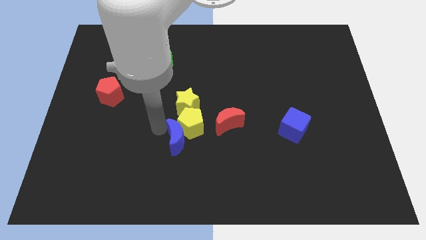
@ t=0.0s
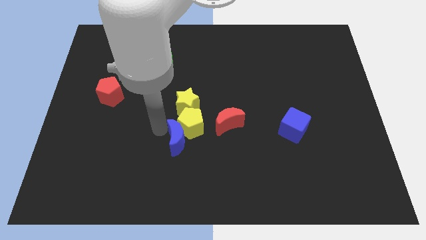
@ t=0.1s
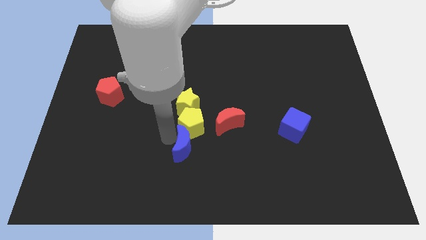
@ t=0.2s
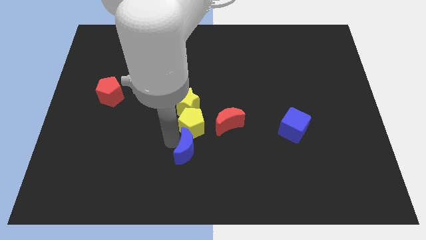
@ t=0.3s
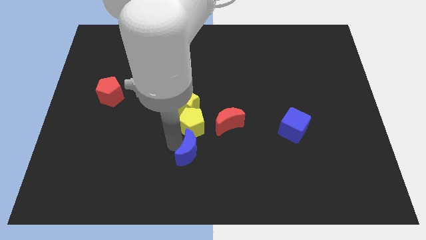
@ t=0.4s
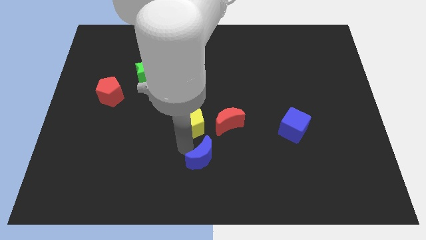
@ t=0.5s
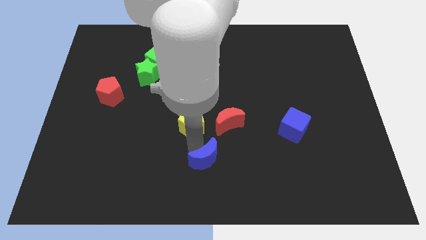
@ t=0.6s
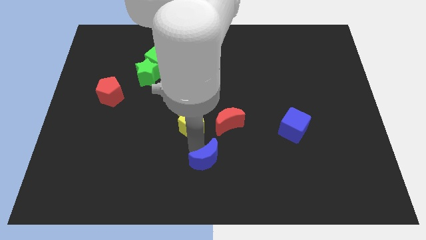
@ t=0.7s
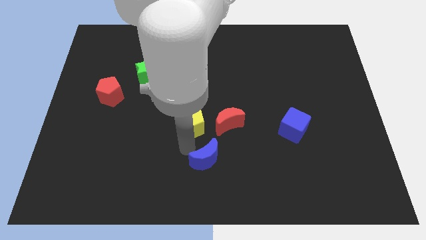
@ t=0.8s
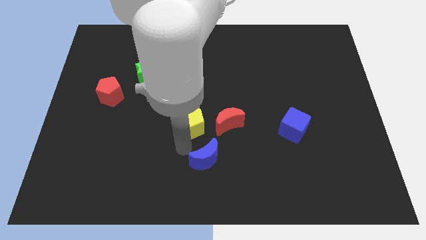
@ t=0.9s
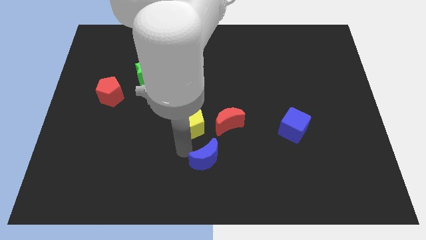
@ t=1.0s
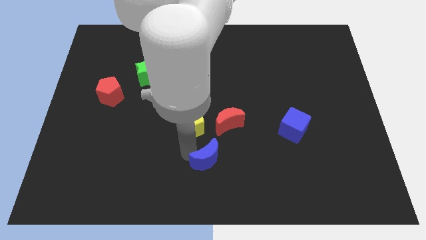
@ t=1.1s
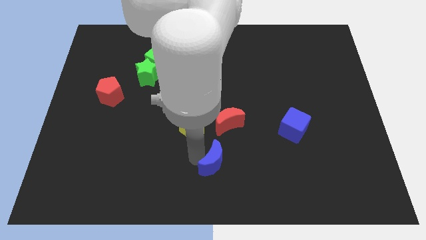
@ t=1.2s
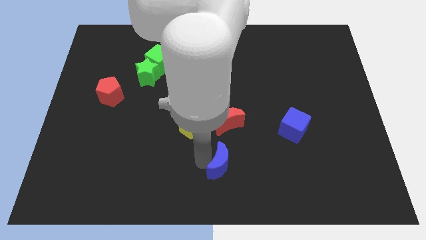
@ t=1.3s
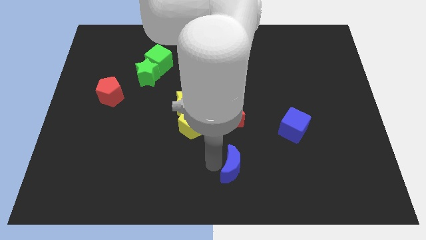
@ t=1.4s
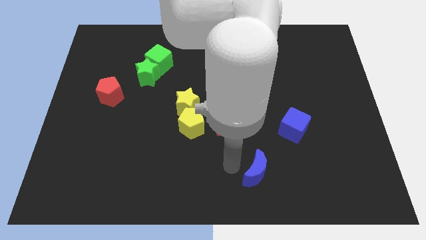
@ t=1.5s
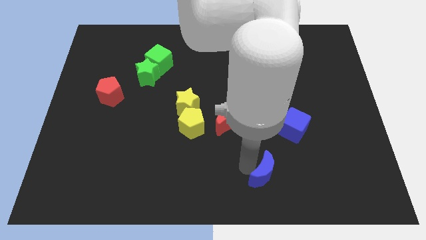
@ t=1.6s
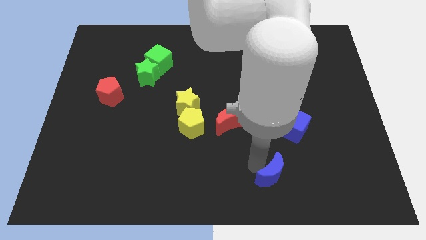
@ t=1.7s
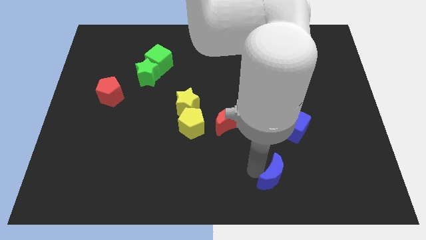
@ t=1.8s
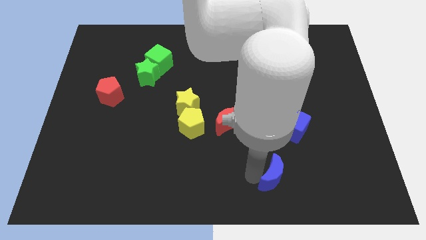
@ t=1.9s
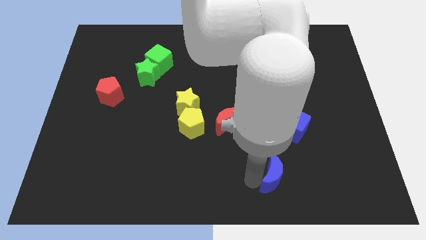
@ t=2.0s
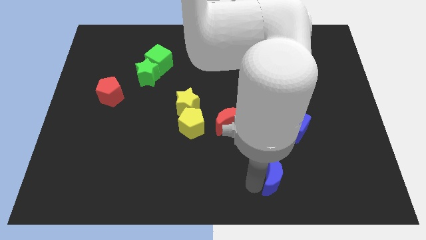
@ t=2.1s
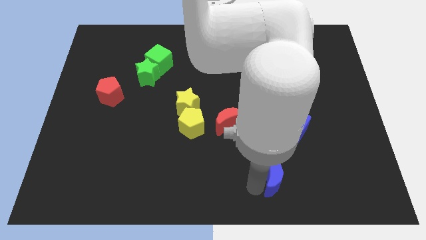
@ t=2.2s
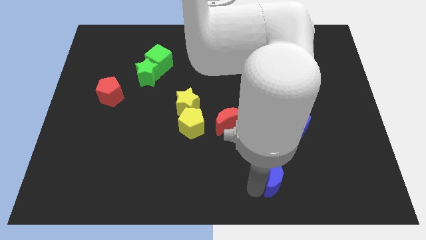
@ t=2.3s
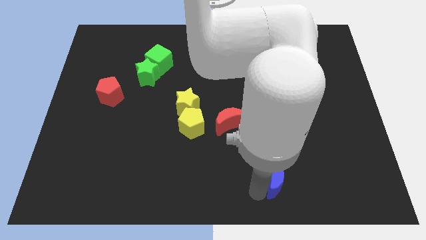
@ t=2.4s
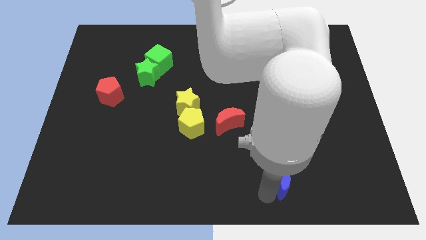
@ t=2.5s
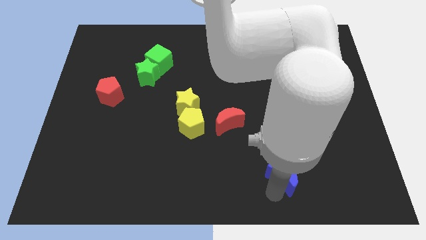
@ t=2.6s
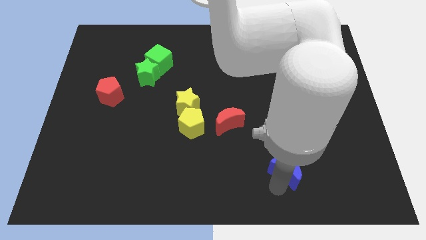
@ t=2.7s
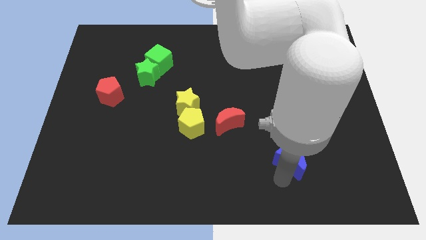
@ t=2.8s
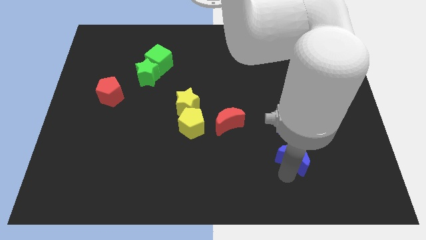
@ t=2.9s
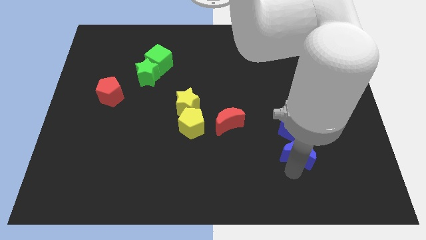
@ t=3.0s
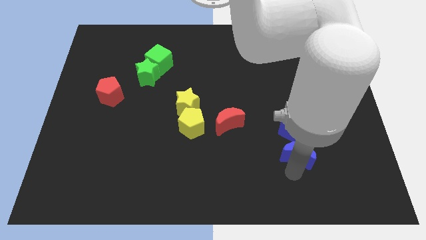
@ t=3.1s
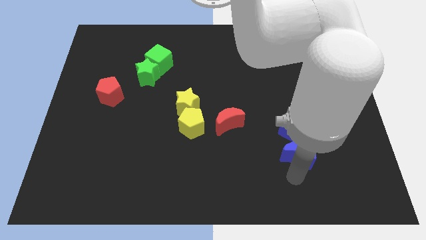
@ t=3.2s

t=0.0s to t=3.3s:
place blue moon to the bottom of the blue cube

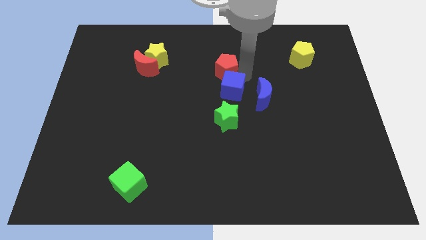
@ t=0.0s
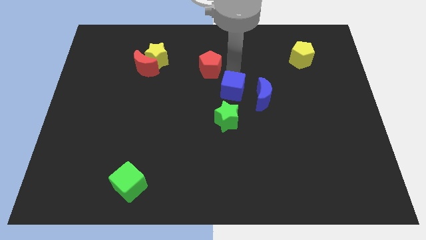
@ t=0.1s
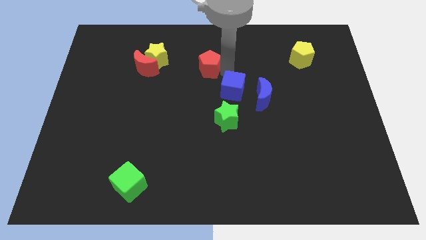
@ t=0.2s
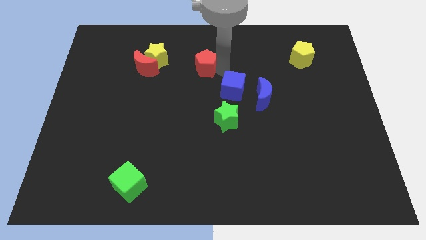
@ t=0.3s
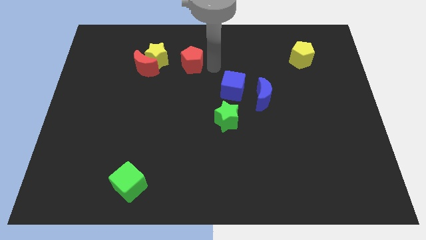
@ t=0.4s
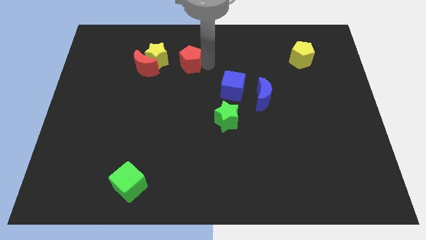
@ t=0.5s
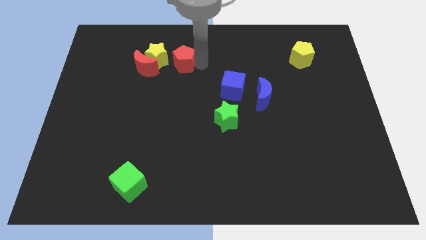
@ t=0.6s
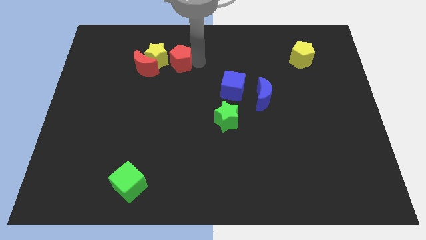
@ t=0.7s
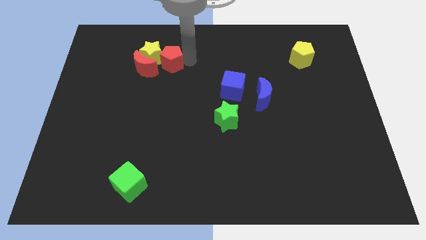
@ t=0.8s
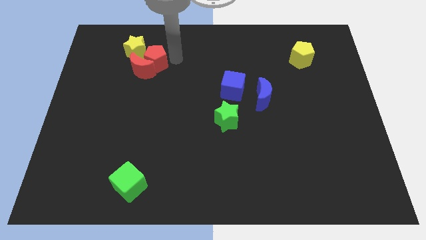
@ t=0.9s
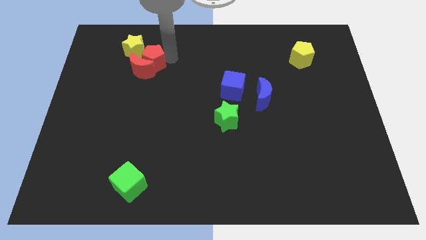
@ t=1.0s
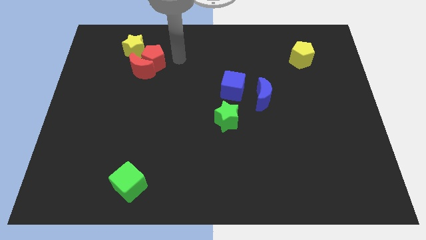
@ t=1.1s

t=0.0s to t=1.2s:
push red pentagon into red moon

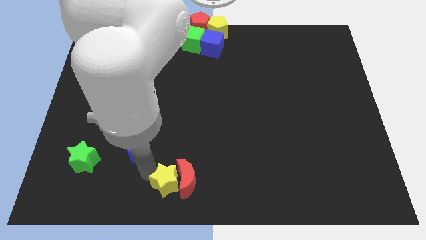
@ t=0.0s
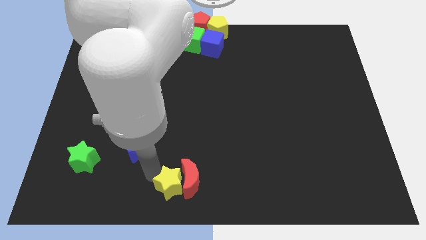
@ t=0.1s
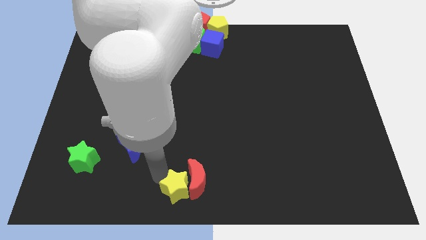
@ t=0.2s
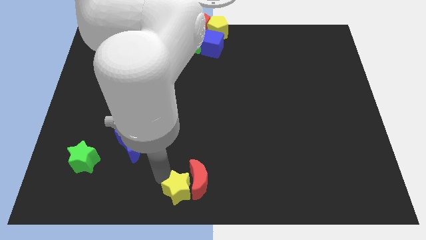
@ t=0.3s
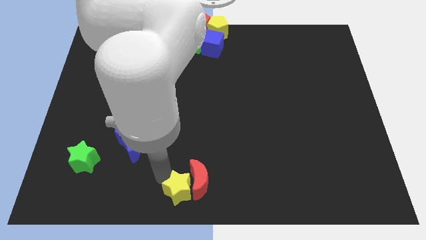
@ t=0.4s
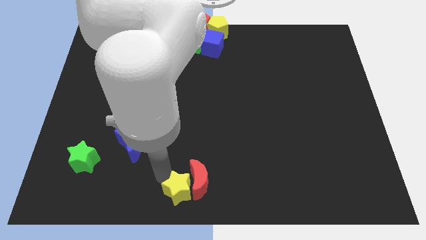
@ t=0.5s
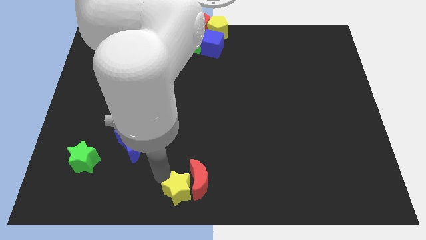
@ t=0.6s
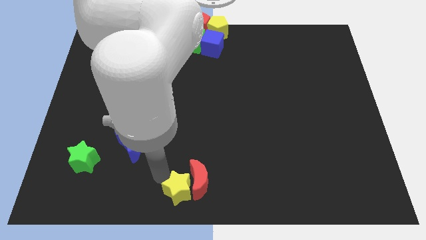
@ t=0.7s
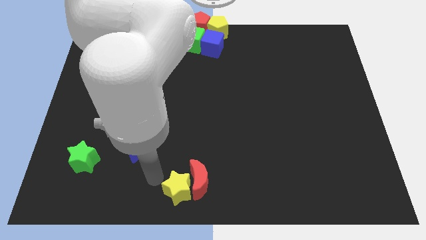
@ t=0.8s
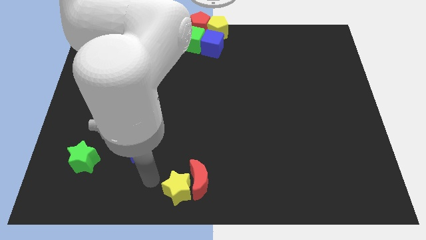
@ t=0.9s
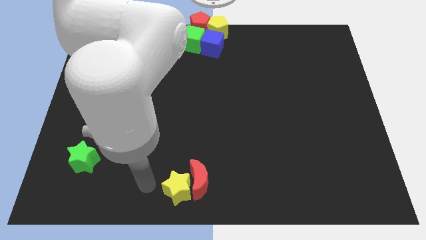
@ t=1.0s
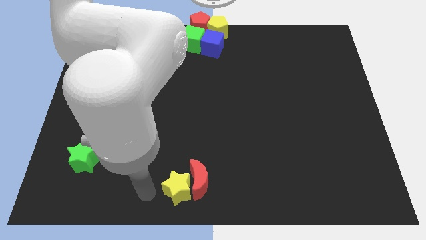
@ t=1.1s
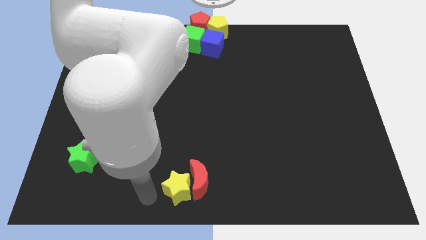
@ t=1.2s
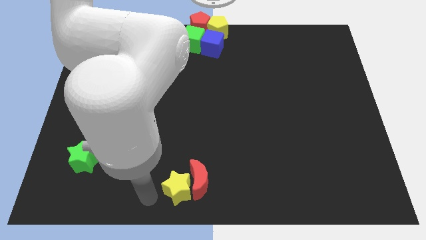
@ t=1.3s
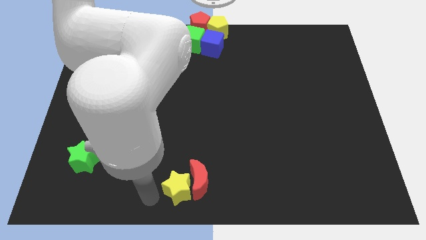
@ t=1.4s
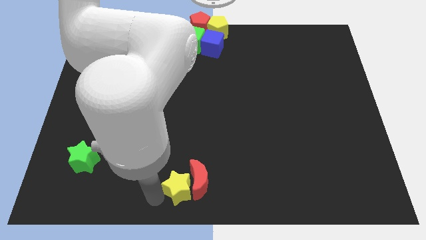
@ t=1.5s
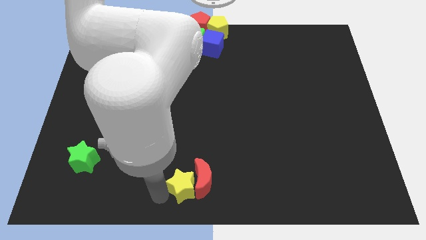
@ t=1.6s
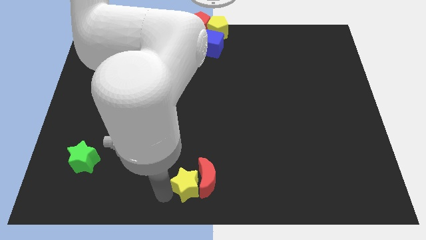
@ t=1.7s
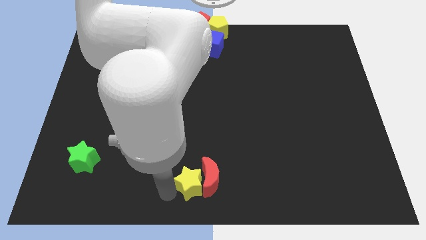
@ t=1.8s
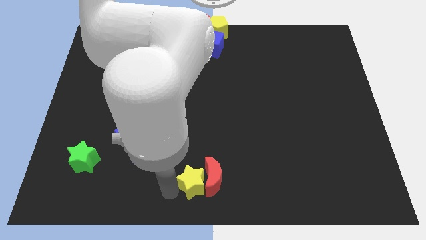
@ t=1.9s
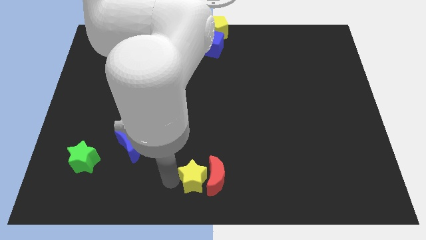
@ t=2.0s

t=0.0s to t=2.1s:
move the yellow star and red moon slightly to the right

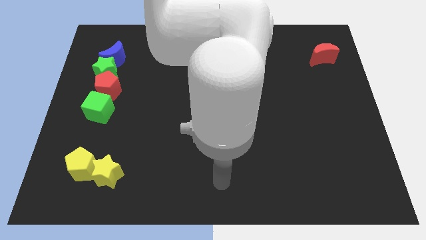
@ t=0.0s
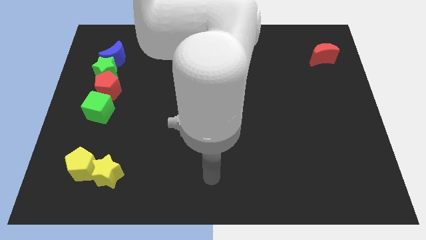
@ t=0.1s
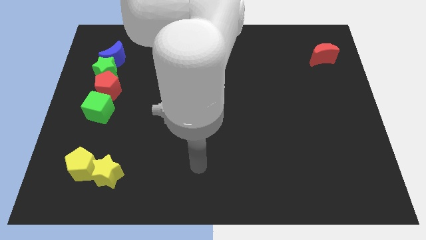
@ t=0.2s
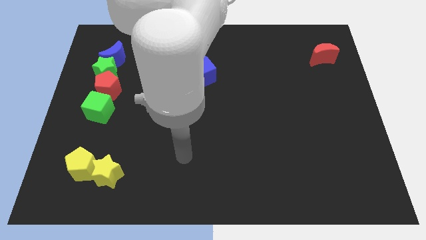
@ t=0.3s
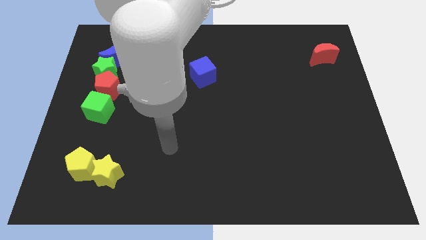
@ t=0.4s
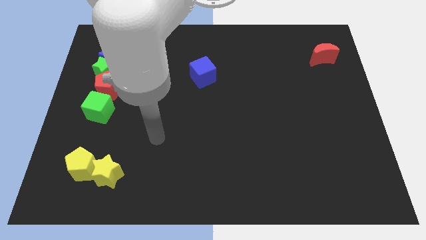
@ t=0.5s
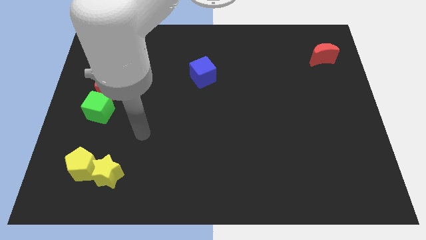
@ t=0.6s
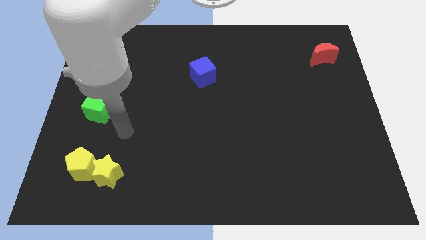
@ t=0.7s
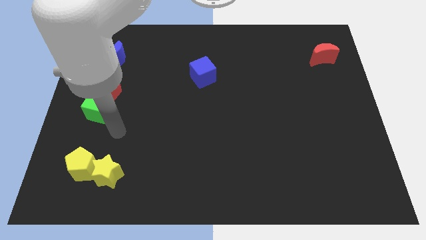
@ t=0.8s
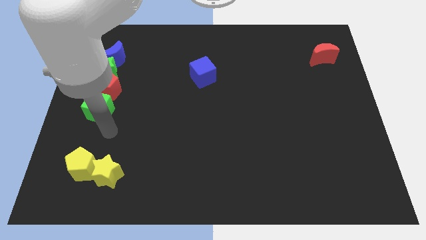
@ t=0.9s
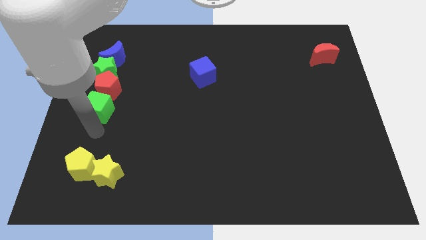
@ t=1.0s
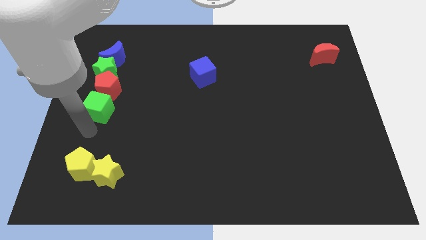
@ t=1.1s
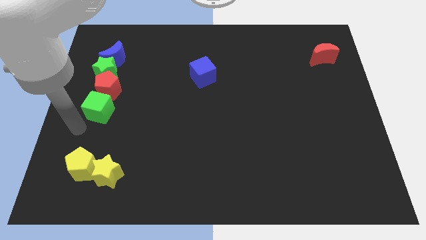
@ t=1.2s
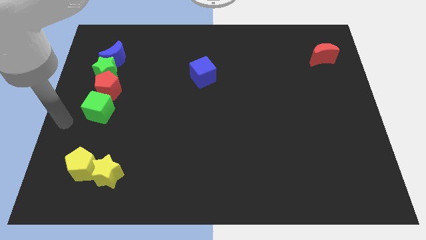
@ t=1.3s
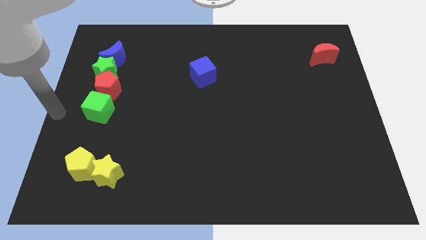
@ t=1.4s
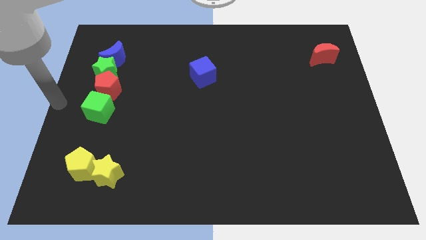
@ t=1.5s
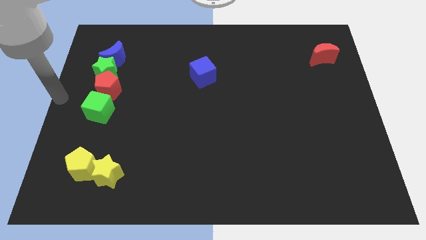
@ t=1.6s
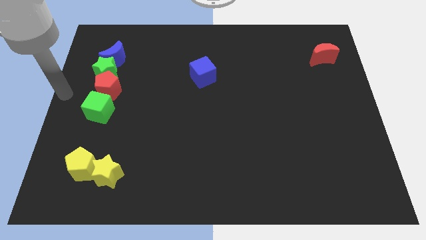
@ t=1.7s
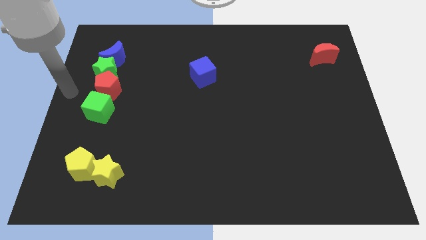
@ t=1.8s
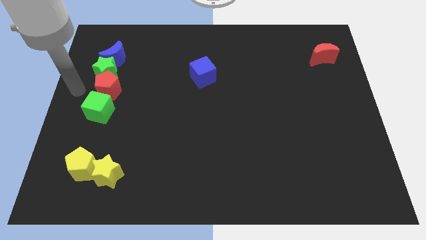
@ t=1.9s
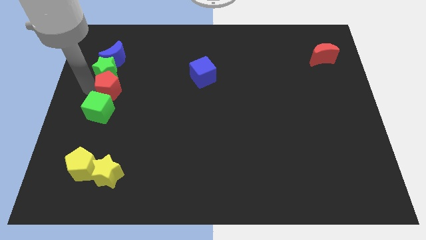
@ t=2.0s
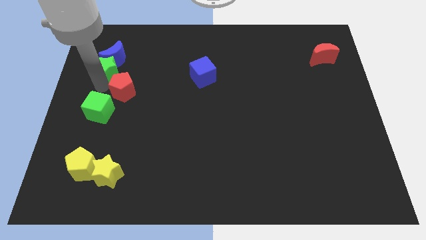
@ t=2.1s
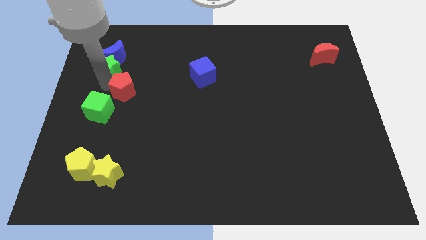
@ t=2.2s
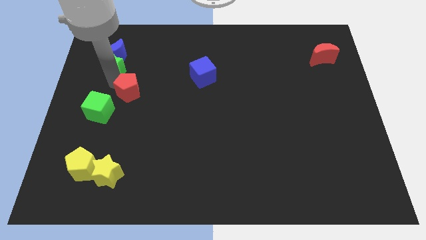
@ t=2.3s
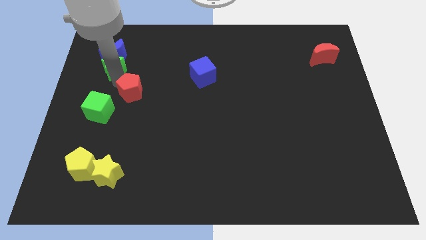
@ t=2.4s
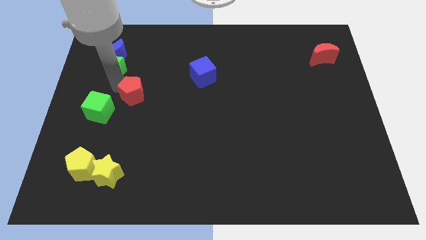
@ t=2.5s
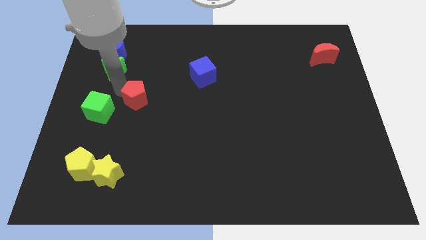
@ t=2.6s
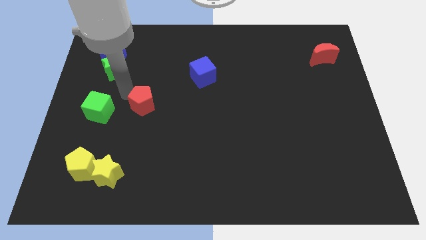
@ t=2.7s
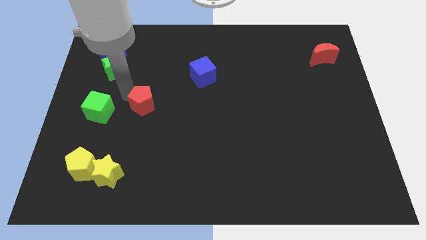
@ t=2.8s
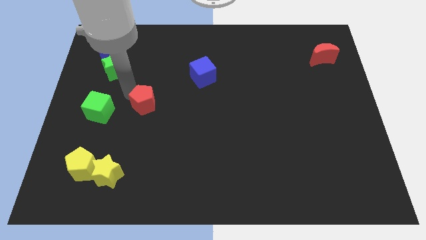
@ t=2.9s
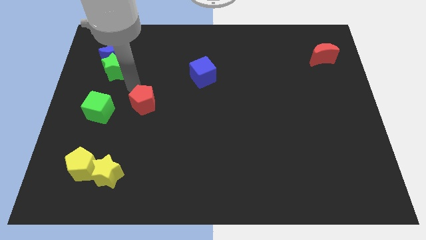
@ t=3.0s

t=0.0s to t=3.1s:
separate the red pentagon from the vertical line of blocks
